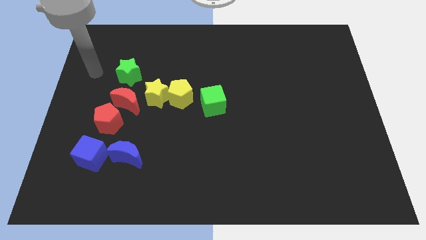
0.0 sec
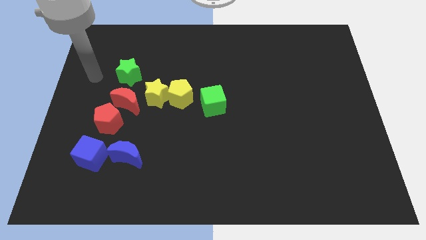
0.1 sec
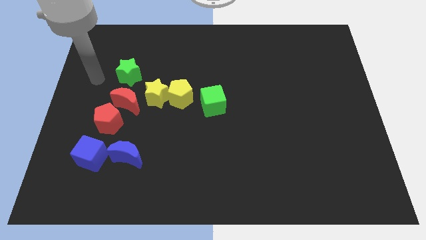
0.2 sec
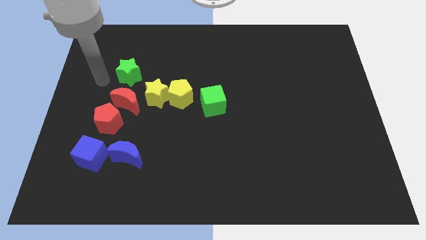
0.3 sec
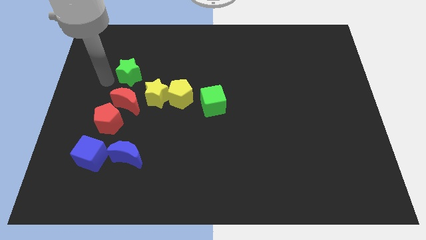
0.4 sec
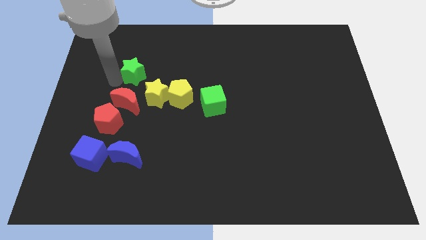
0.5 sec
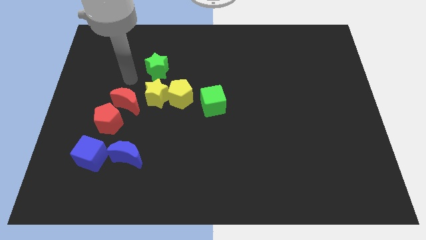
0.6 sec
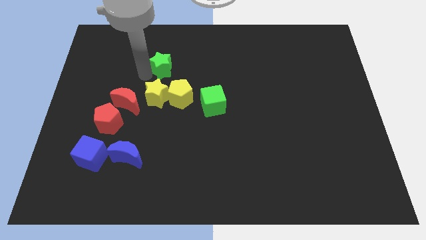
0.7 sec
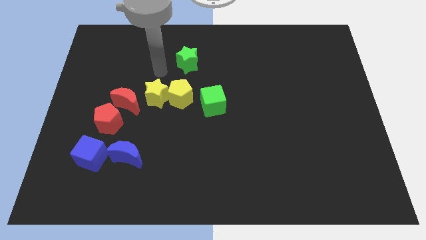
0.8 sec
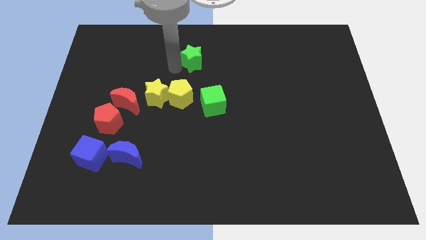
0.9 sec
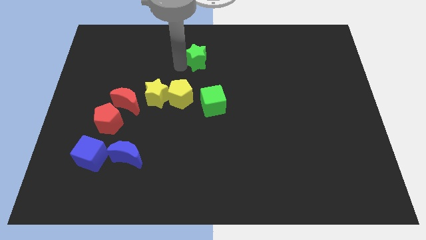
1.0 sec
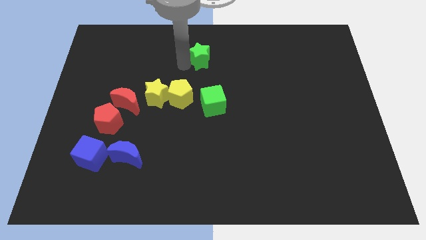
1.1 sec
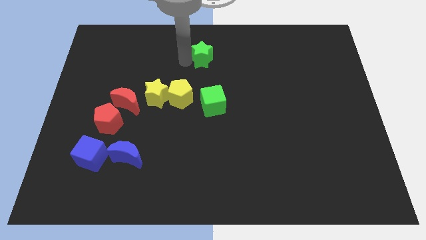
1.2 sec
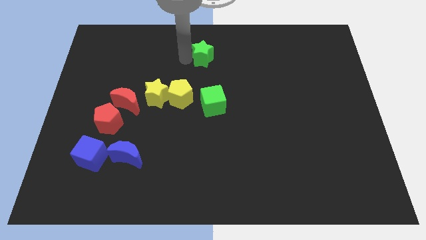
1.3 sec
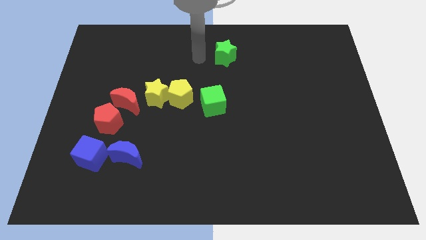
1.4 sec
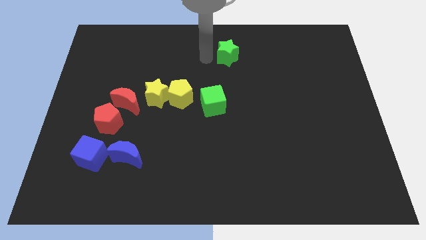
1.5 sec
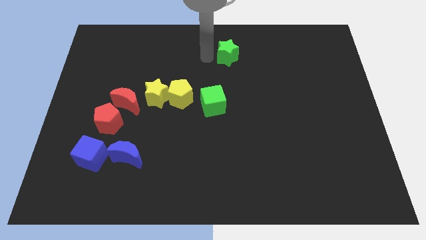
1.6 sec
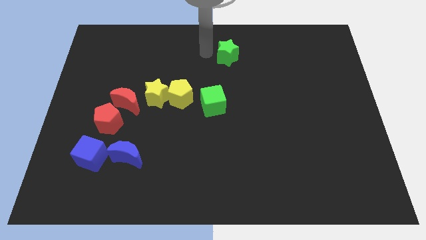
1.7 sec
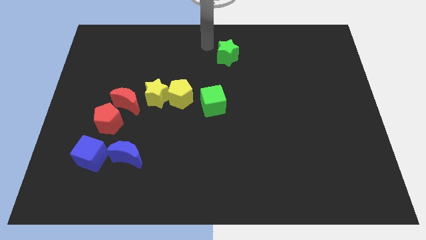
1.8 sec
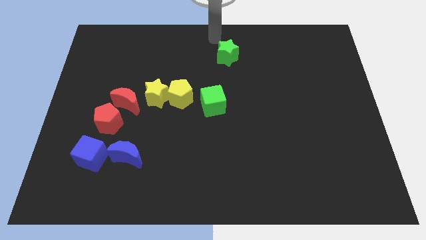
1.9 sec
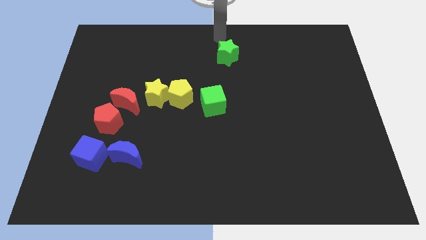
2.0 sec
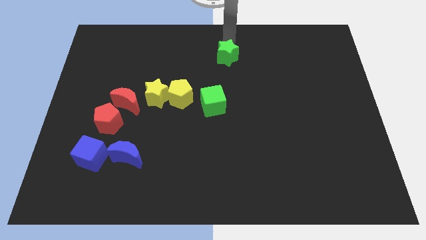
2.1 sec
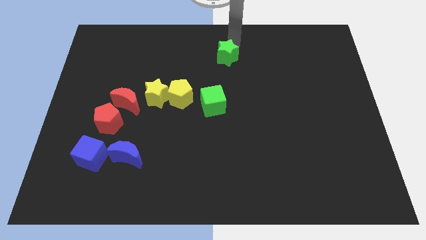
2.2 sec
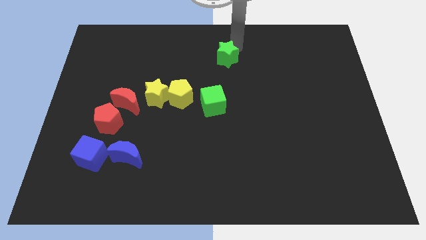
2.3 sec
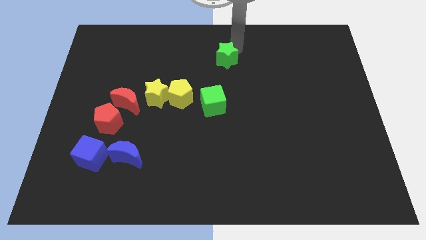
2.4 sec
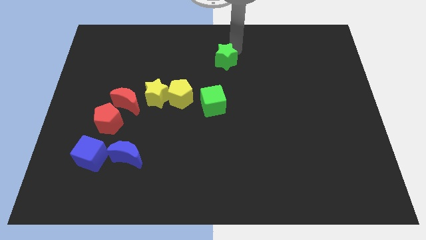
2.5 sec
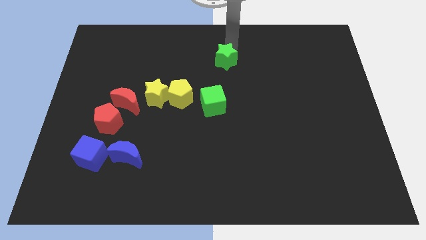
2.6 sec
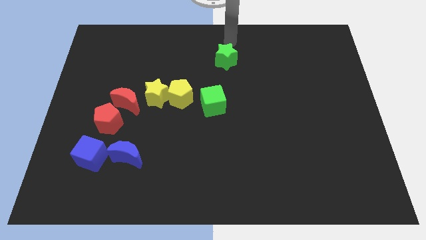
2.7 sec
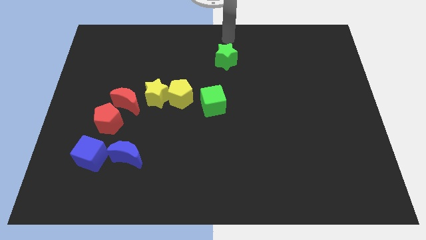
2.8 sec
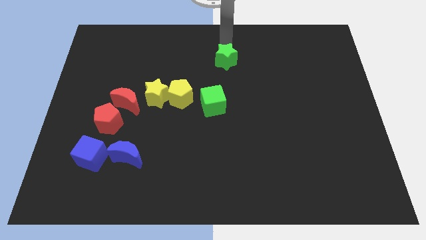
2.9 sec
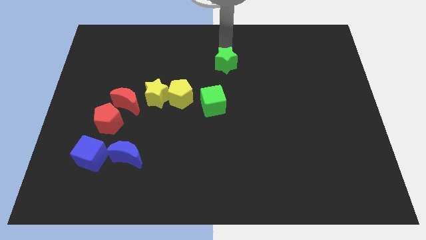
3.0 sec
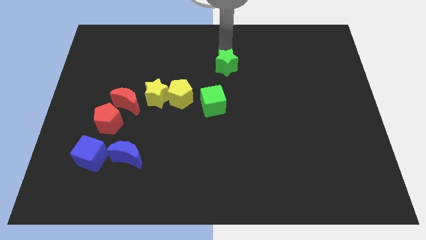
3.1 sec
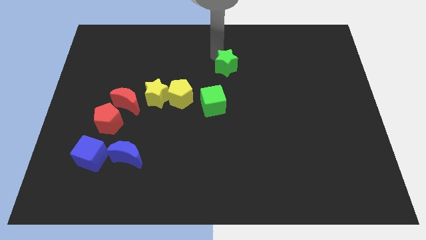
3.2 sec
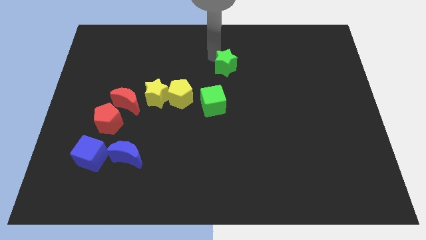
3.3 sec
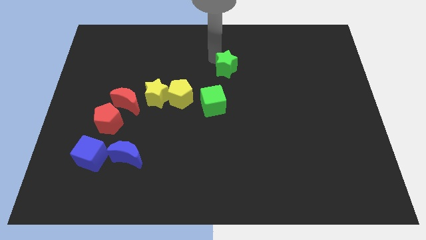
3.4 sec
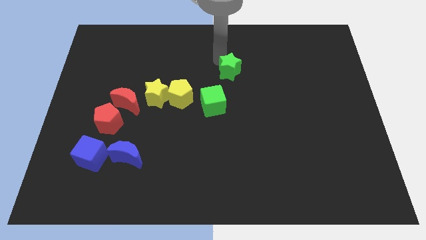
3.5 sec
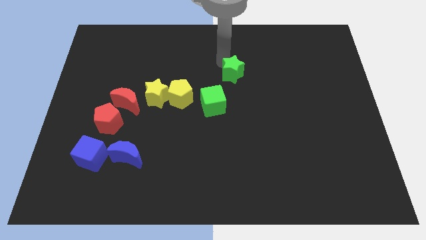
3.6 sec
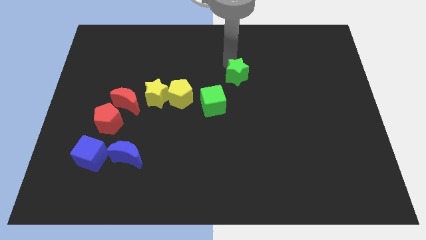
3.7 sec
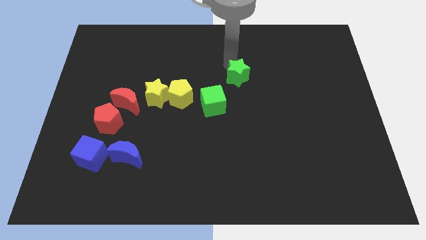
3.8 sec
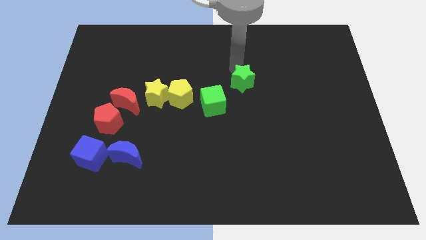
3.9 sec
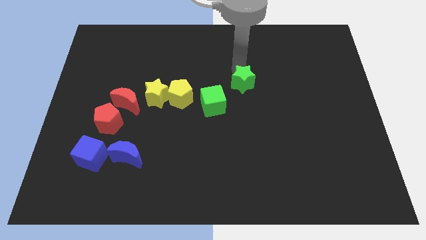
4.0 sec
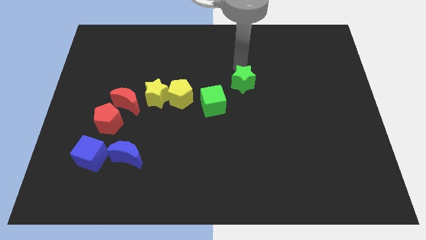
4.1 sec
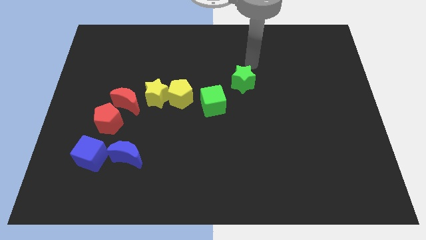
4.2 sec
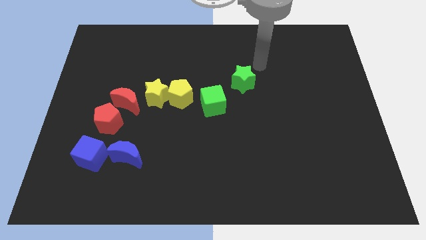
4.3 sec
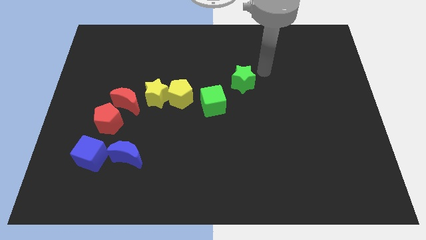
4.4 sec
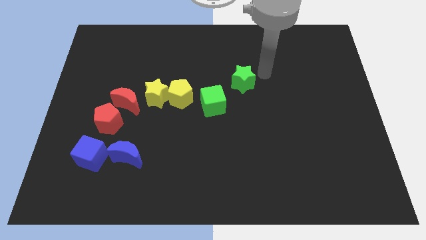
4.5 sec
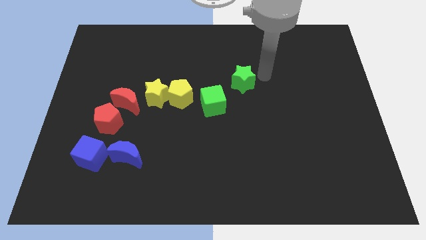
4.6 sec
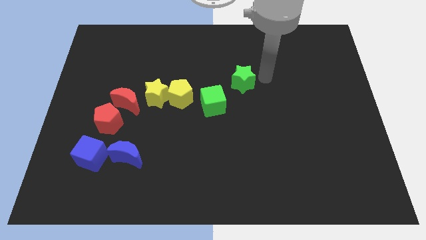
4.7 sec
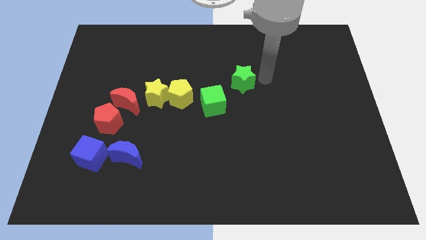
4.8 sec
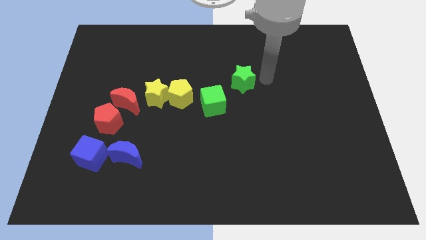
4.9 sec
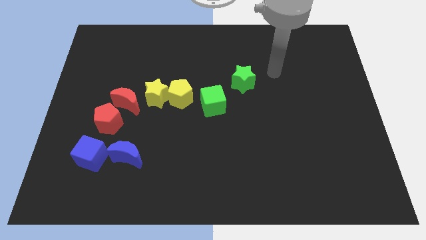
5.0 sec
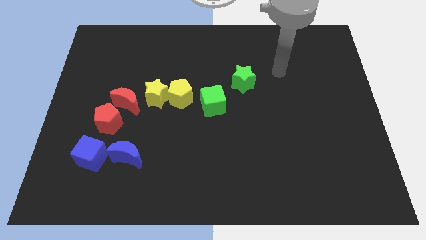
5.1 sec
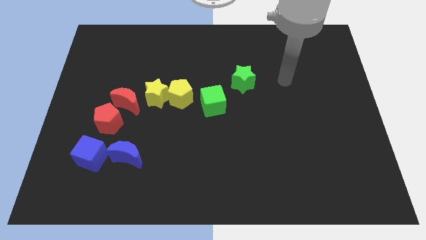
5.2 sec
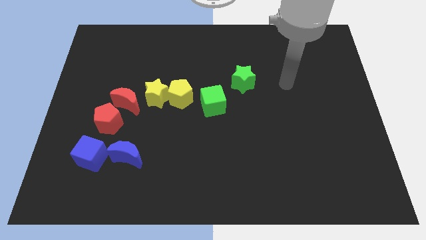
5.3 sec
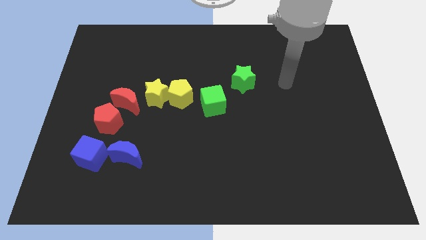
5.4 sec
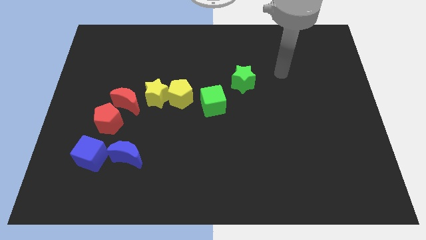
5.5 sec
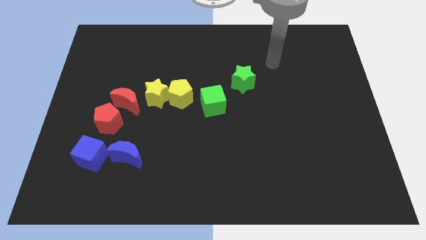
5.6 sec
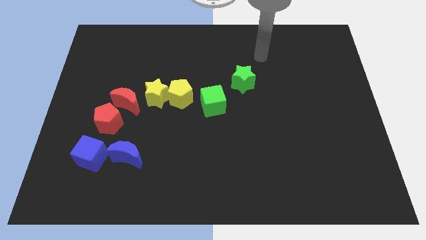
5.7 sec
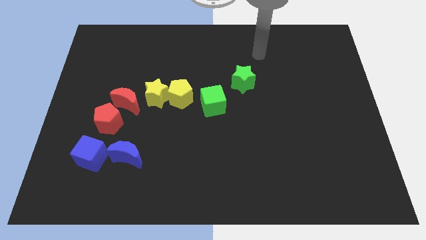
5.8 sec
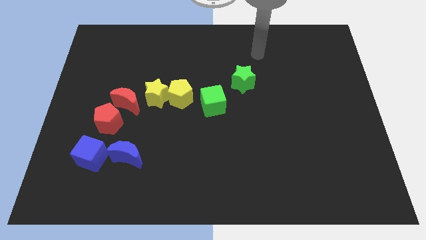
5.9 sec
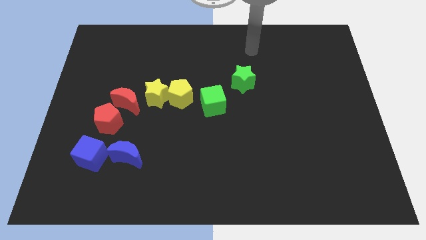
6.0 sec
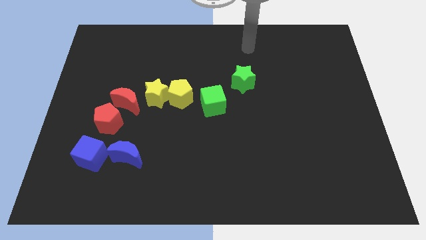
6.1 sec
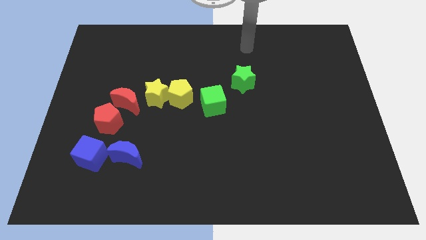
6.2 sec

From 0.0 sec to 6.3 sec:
place the green star to the top right green cube

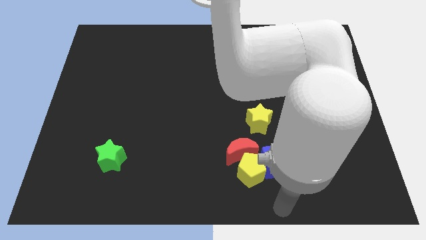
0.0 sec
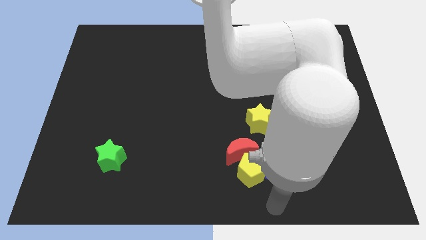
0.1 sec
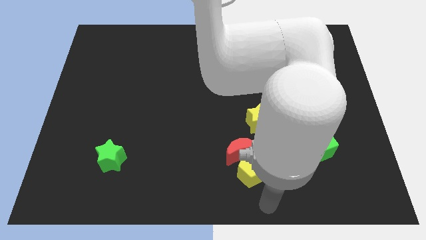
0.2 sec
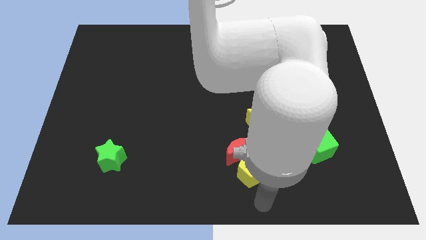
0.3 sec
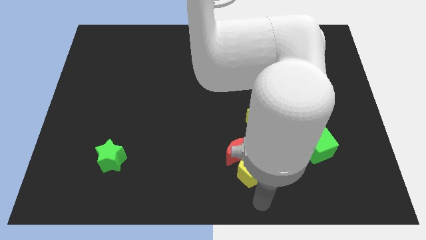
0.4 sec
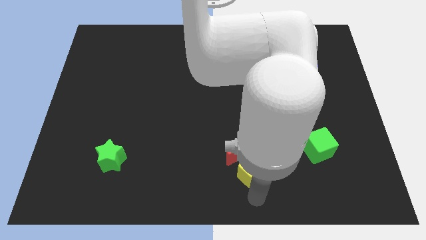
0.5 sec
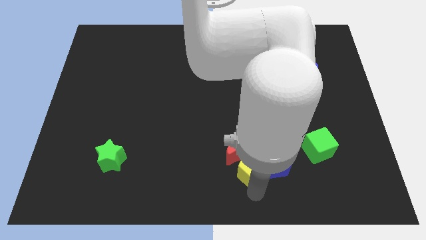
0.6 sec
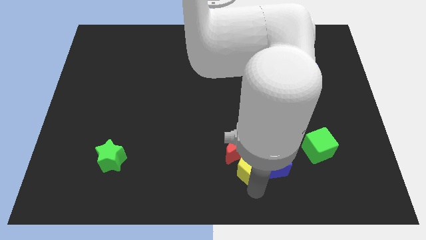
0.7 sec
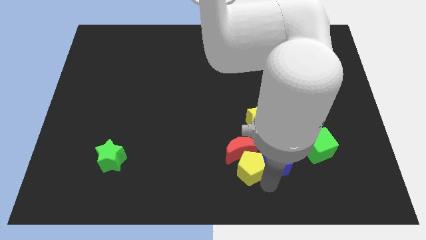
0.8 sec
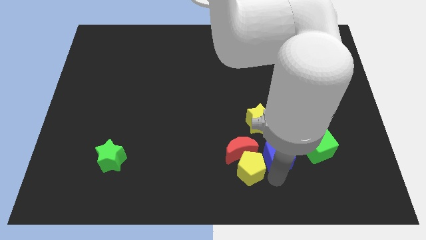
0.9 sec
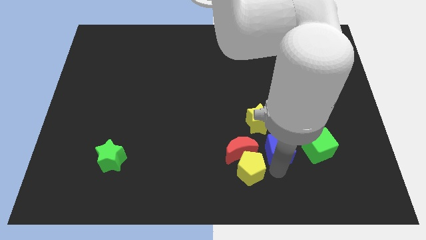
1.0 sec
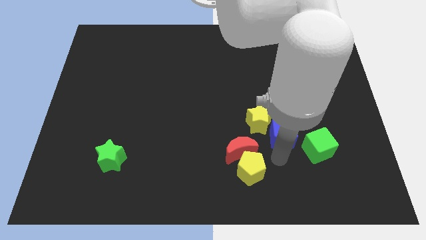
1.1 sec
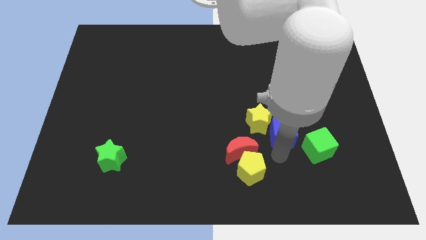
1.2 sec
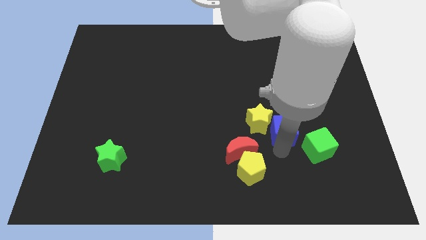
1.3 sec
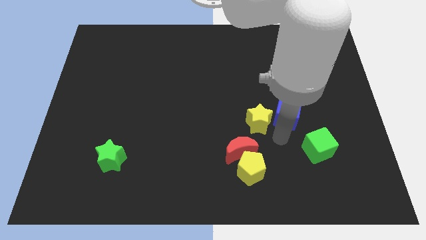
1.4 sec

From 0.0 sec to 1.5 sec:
separate the blue cube from the yellow pentagon

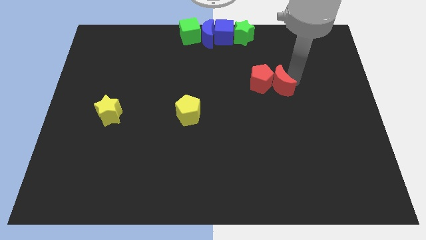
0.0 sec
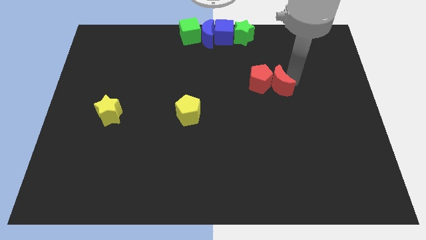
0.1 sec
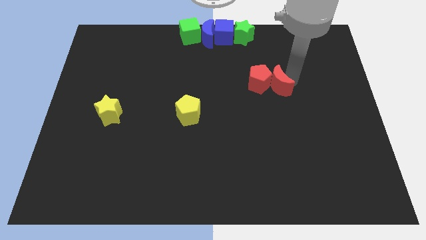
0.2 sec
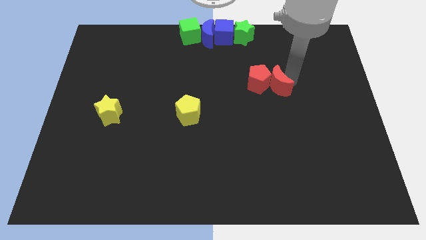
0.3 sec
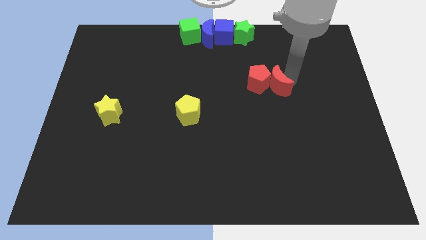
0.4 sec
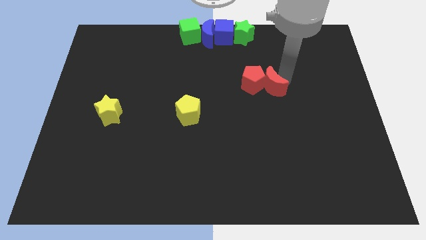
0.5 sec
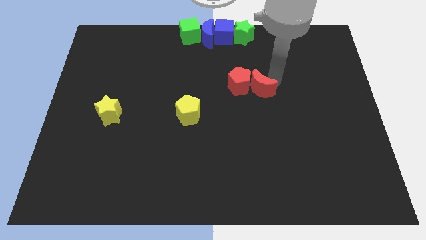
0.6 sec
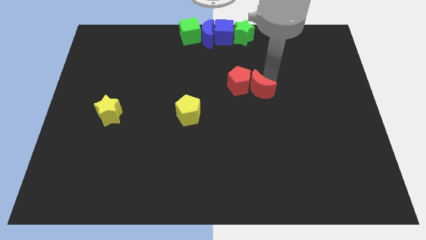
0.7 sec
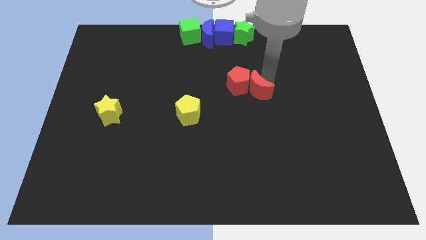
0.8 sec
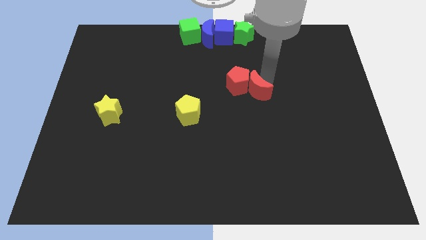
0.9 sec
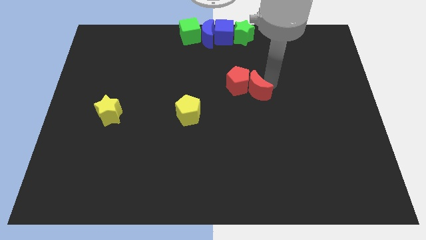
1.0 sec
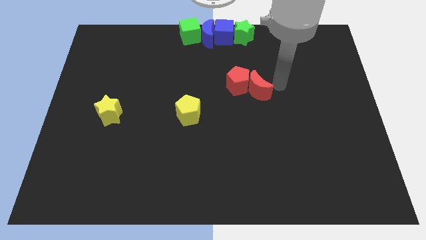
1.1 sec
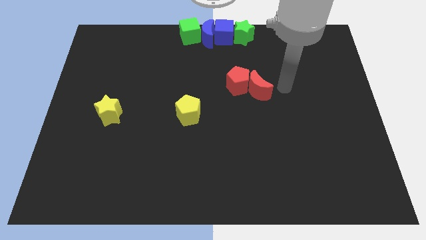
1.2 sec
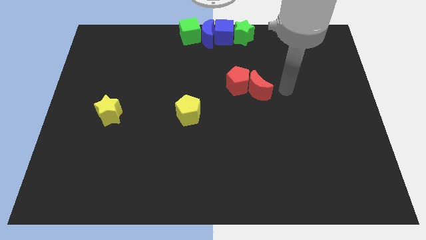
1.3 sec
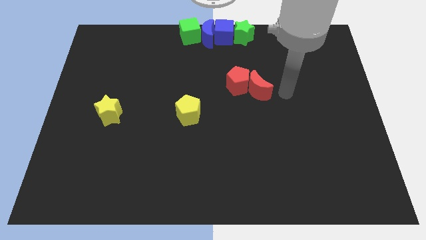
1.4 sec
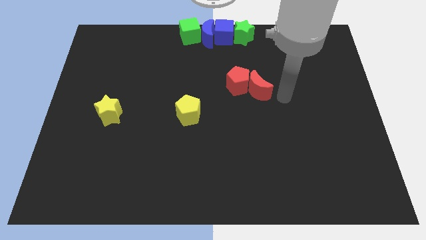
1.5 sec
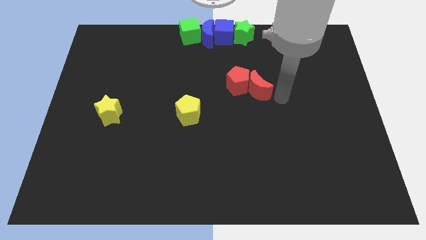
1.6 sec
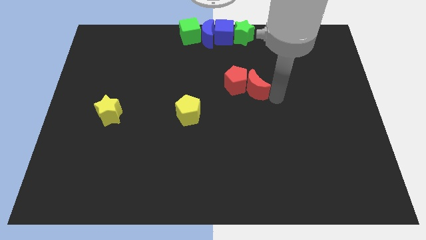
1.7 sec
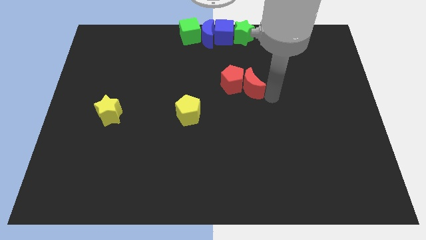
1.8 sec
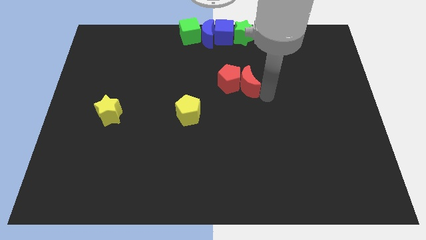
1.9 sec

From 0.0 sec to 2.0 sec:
move the red blocks slightly to the left
